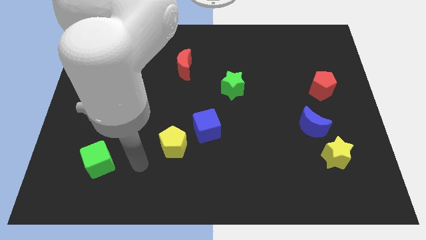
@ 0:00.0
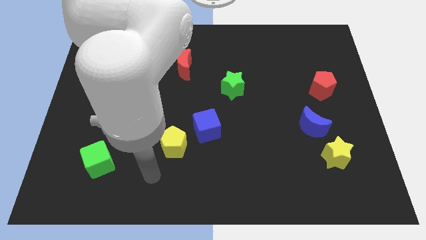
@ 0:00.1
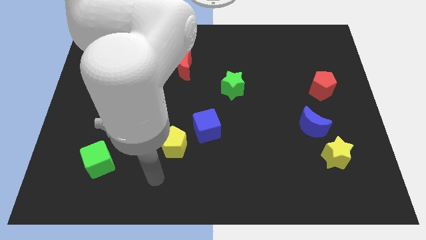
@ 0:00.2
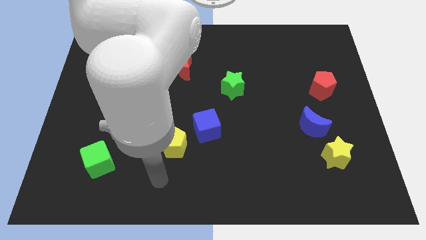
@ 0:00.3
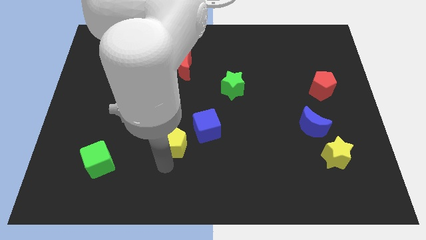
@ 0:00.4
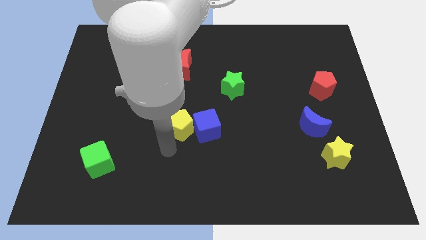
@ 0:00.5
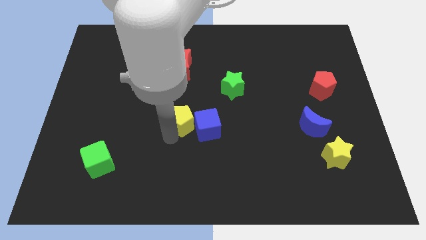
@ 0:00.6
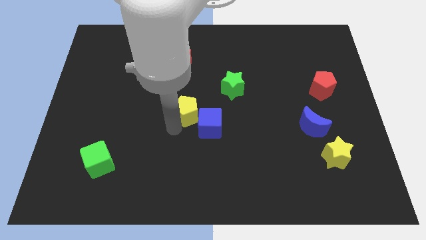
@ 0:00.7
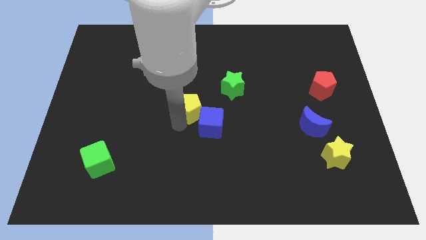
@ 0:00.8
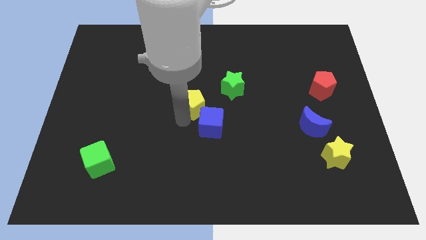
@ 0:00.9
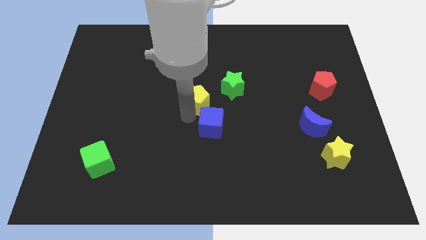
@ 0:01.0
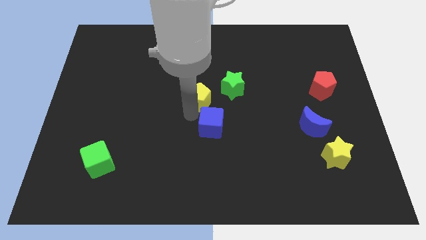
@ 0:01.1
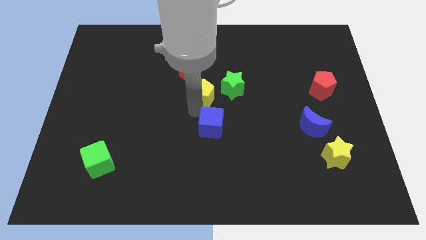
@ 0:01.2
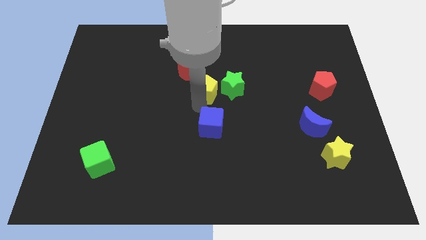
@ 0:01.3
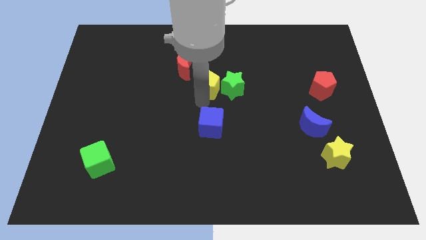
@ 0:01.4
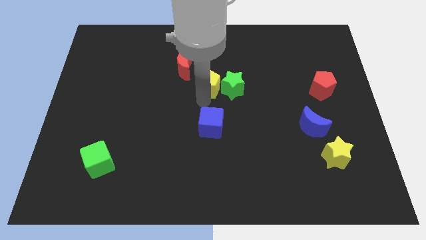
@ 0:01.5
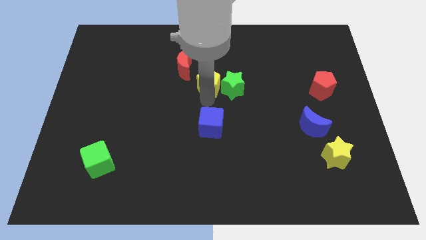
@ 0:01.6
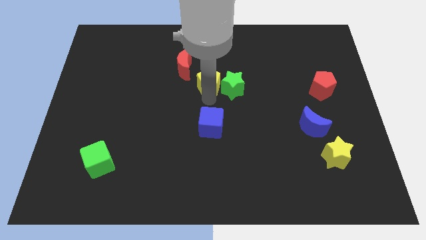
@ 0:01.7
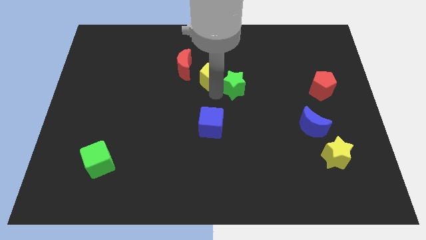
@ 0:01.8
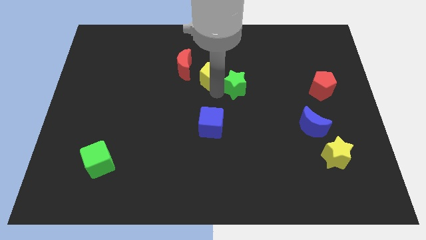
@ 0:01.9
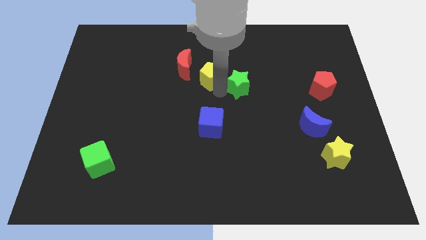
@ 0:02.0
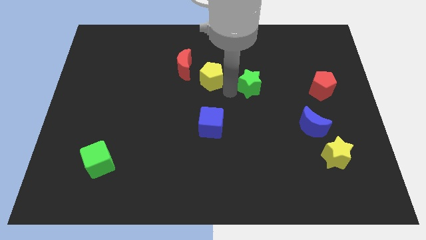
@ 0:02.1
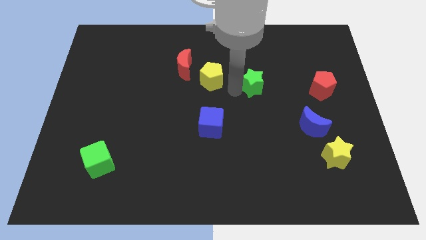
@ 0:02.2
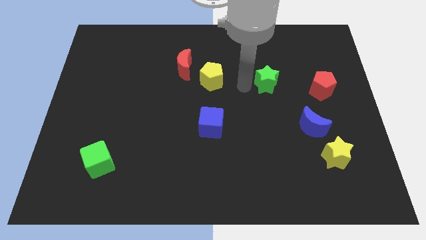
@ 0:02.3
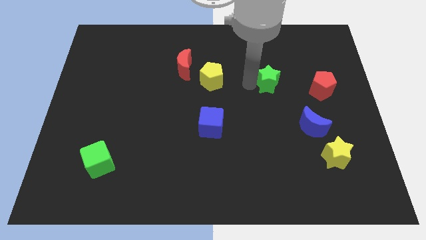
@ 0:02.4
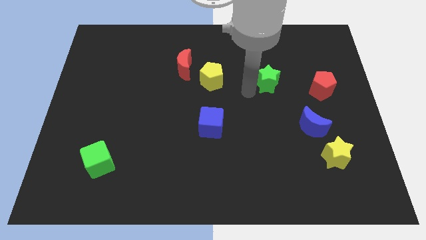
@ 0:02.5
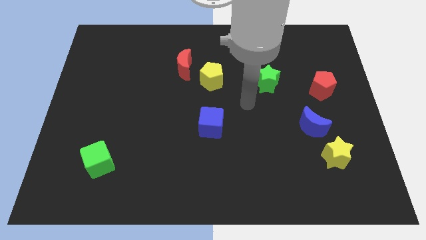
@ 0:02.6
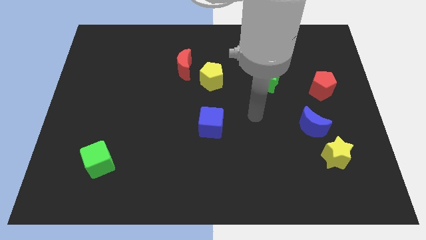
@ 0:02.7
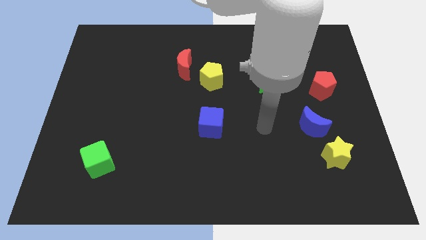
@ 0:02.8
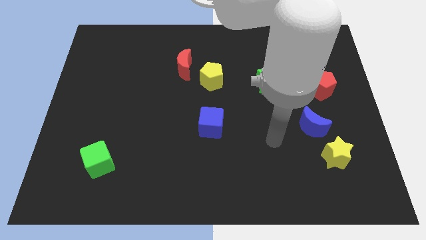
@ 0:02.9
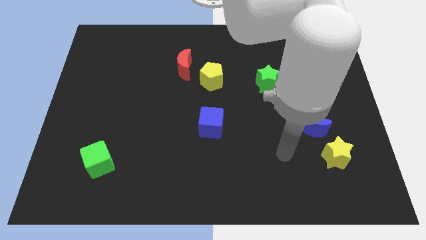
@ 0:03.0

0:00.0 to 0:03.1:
move the red pentagon diagonally to the red moon

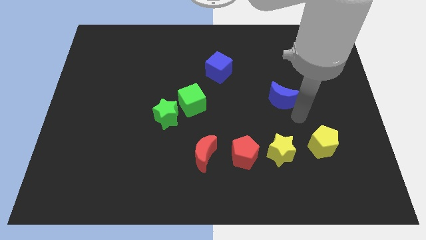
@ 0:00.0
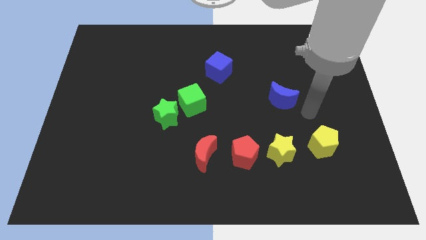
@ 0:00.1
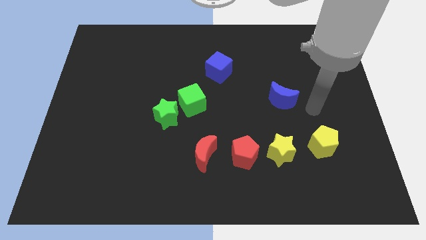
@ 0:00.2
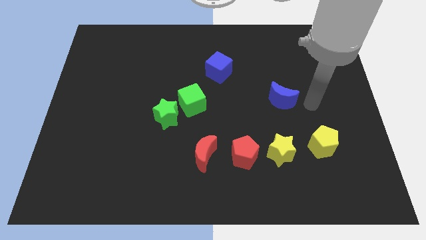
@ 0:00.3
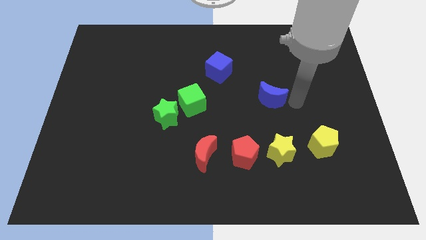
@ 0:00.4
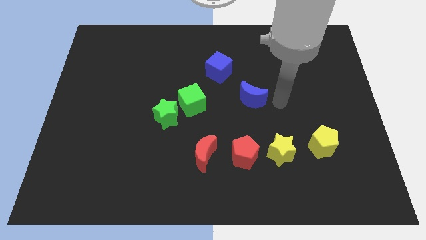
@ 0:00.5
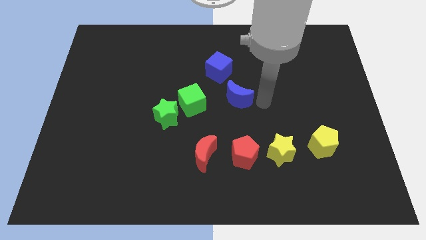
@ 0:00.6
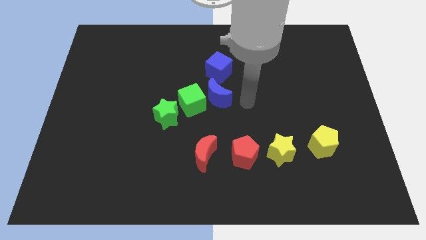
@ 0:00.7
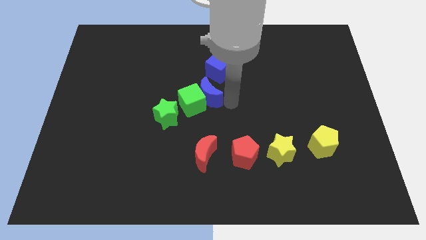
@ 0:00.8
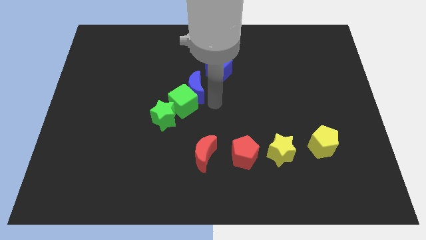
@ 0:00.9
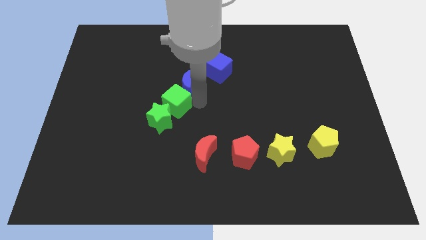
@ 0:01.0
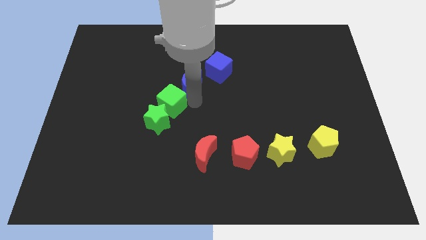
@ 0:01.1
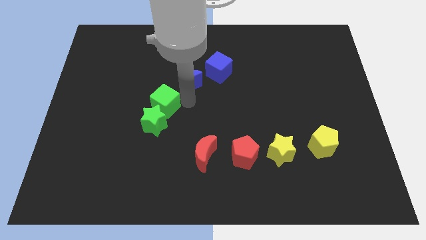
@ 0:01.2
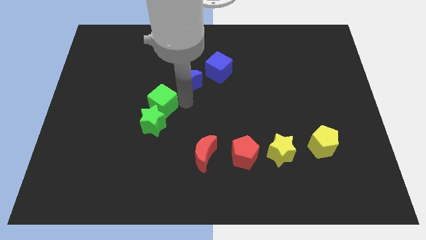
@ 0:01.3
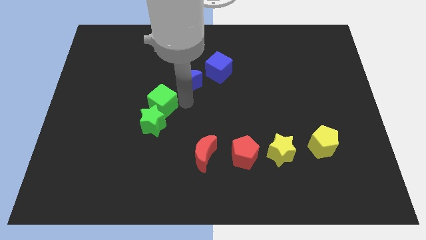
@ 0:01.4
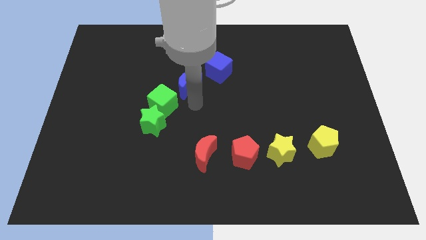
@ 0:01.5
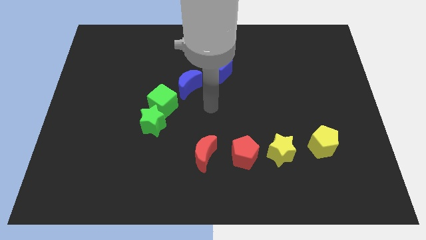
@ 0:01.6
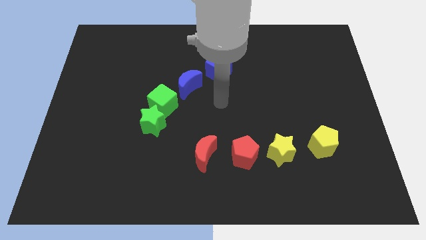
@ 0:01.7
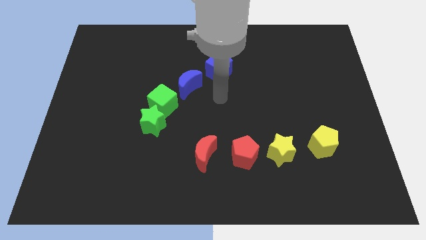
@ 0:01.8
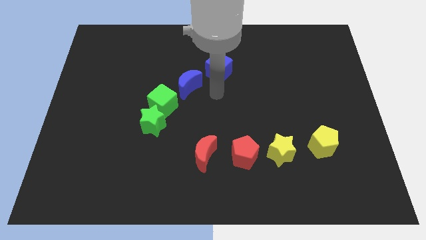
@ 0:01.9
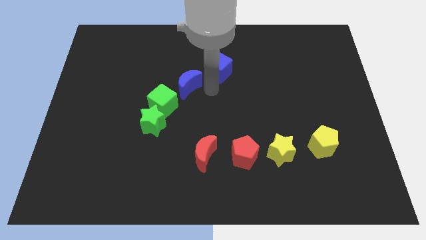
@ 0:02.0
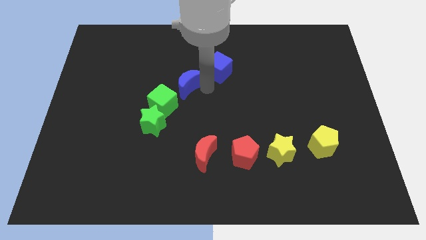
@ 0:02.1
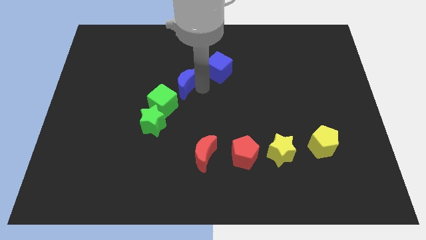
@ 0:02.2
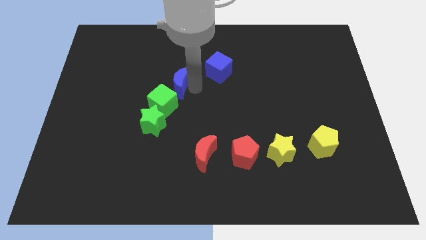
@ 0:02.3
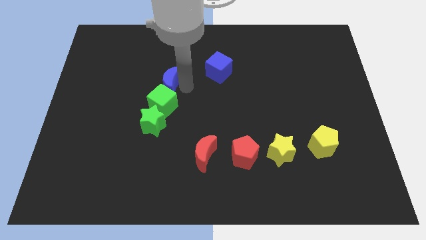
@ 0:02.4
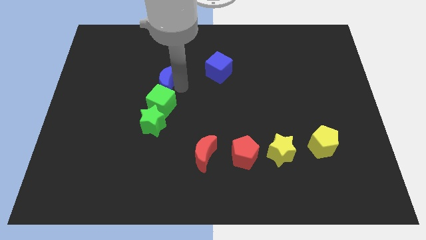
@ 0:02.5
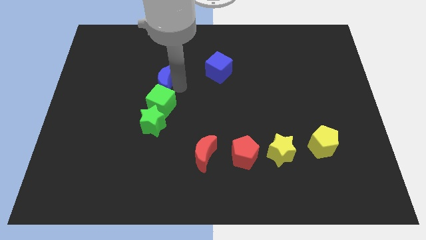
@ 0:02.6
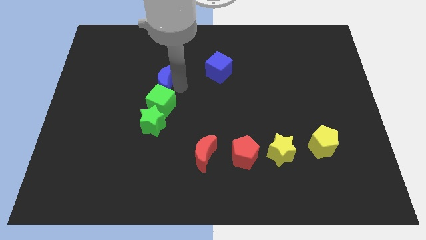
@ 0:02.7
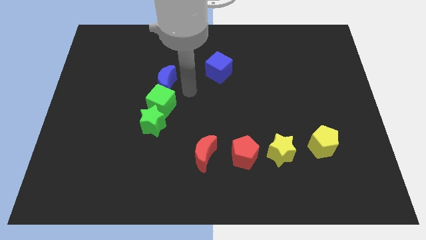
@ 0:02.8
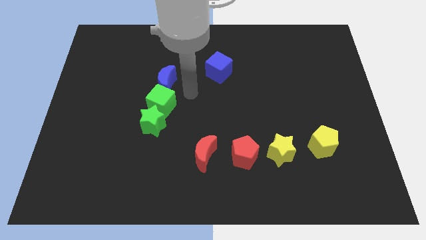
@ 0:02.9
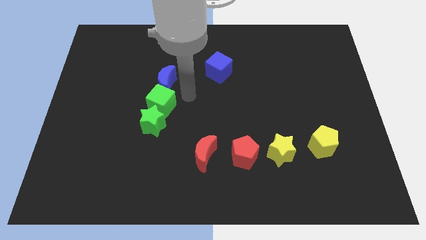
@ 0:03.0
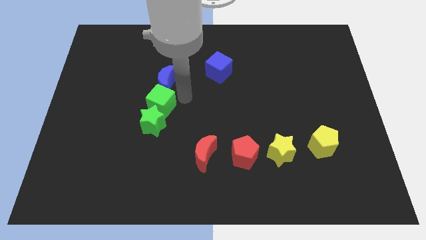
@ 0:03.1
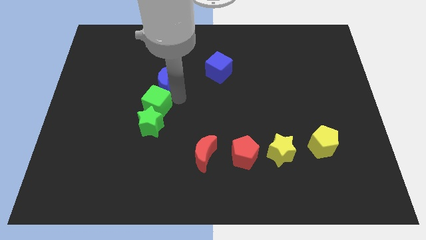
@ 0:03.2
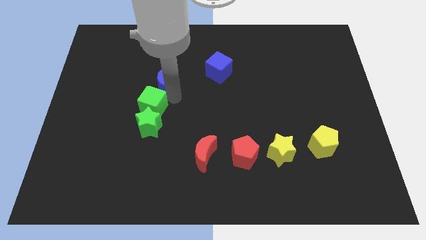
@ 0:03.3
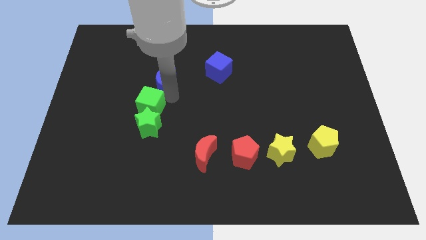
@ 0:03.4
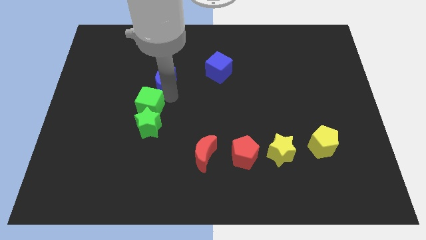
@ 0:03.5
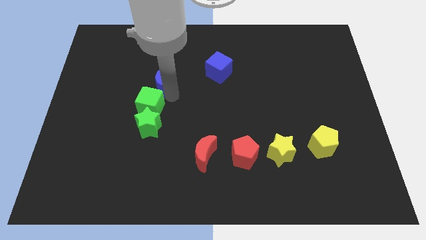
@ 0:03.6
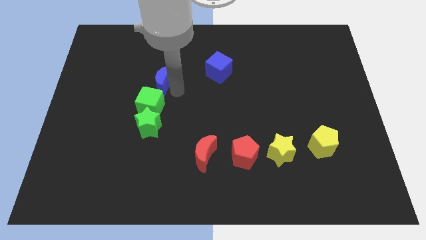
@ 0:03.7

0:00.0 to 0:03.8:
place the blue moon at the top of the green square

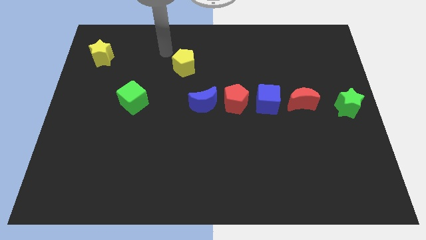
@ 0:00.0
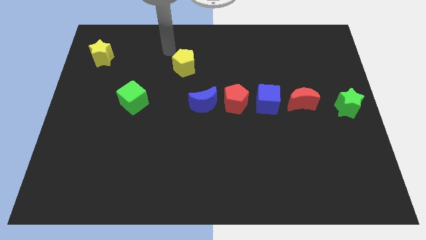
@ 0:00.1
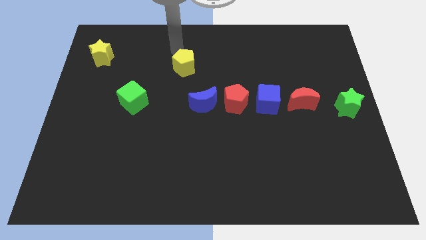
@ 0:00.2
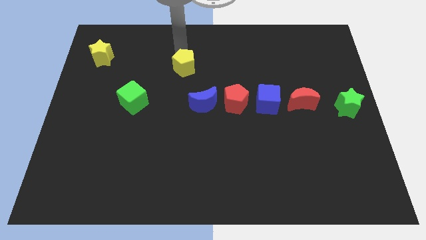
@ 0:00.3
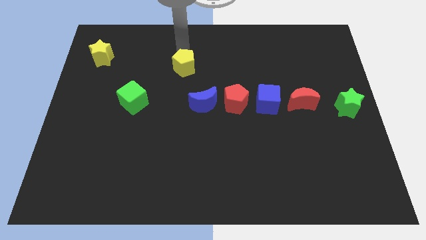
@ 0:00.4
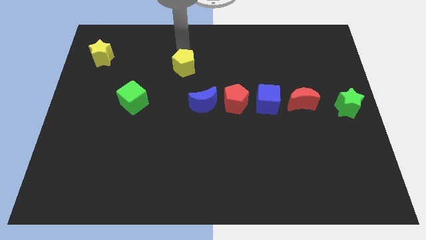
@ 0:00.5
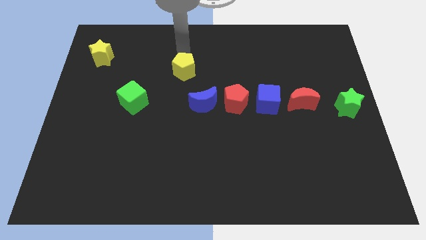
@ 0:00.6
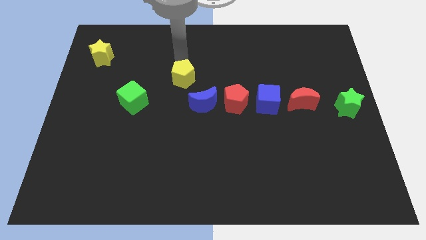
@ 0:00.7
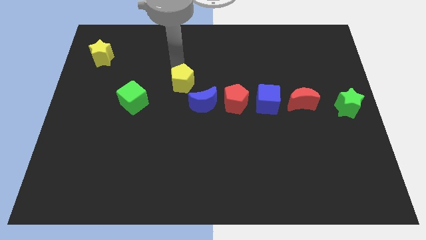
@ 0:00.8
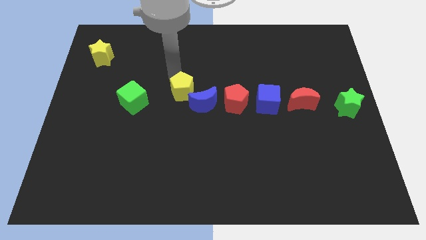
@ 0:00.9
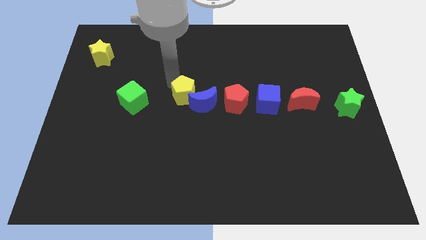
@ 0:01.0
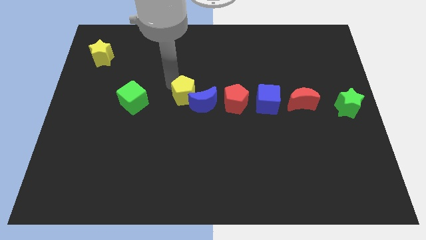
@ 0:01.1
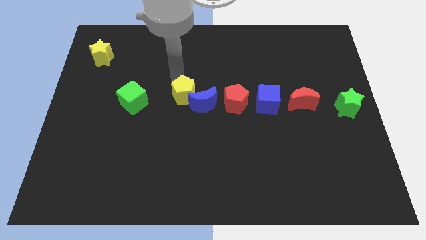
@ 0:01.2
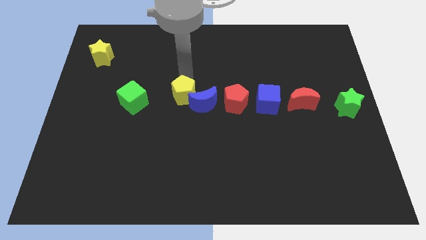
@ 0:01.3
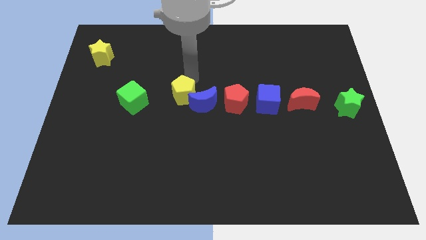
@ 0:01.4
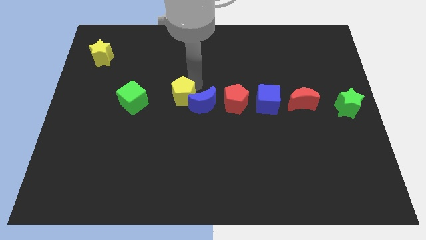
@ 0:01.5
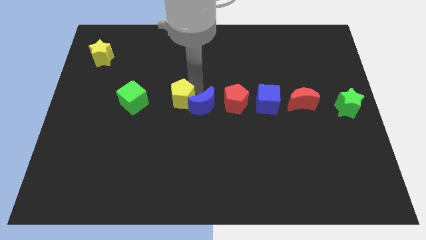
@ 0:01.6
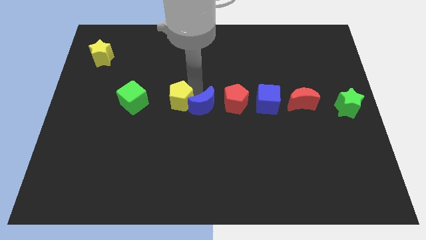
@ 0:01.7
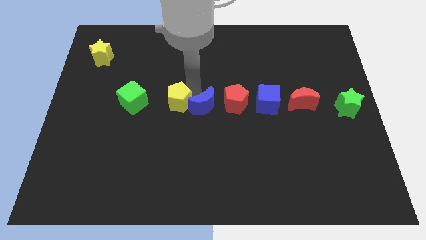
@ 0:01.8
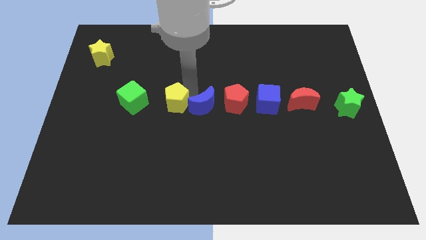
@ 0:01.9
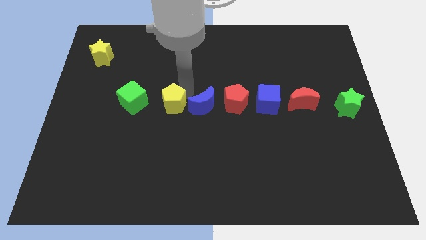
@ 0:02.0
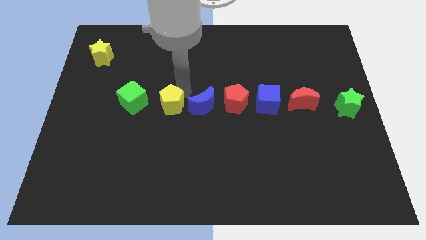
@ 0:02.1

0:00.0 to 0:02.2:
drag the yellow pentagon in between the green cube and blue moon
